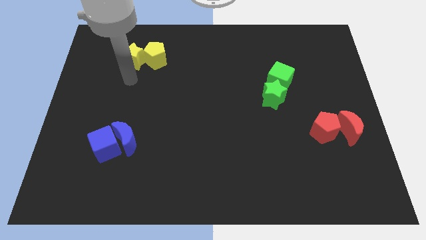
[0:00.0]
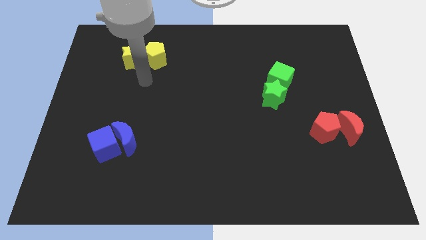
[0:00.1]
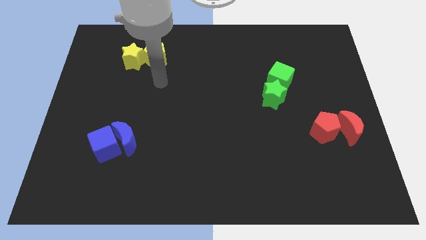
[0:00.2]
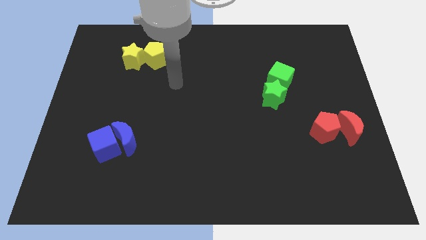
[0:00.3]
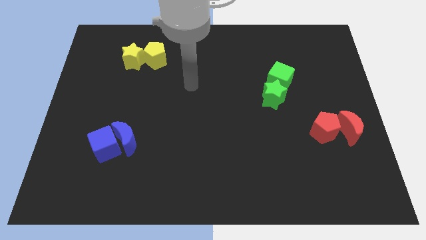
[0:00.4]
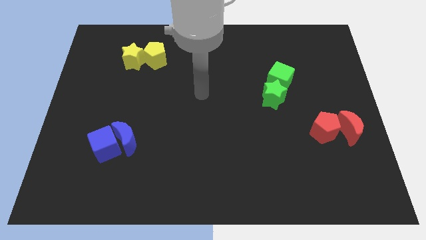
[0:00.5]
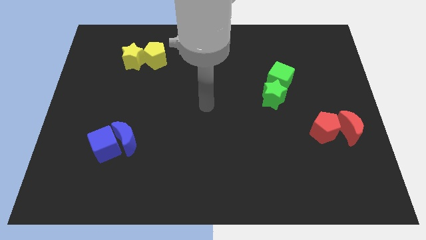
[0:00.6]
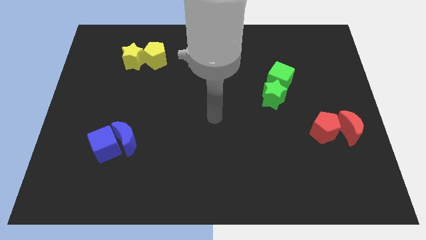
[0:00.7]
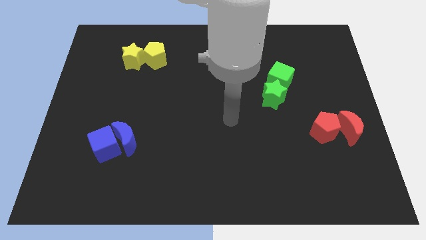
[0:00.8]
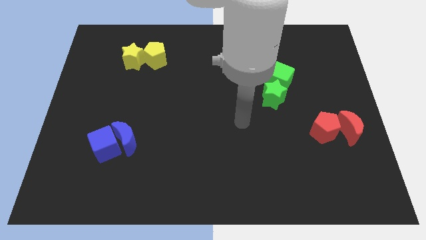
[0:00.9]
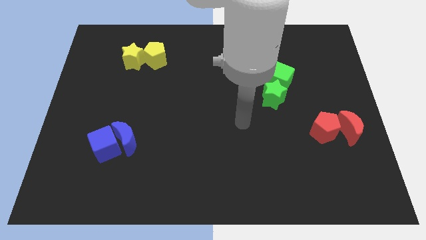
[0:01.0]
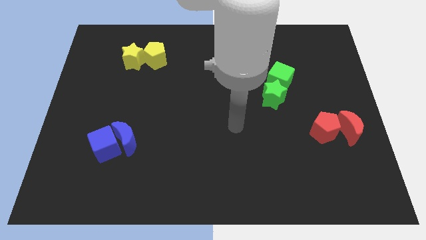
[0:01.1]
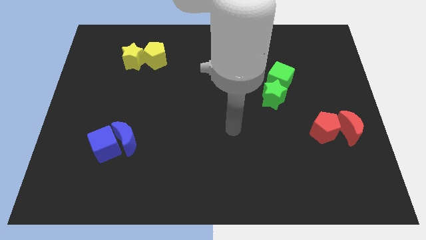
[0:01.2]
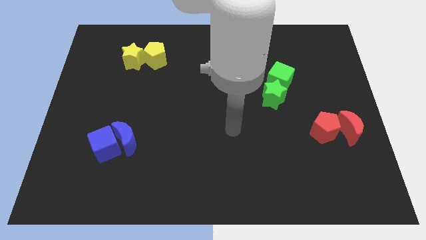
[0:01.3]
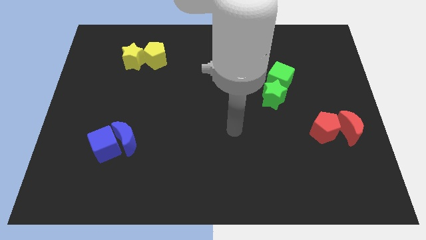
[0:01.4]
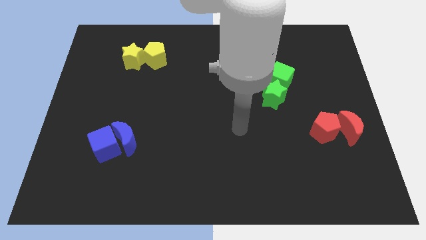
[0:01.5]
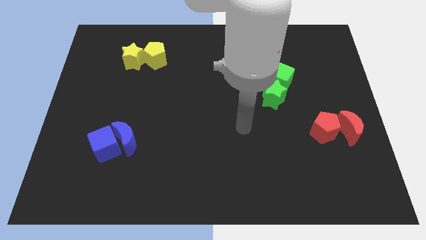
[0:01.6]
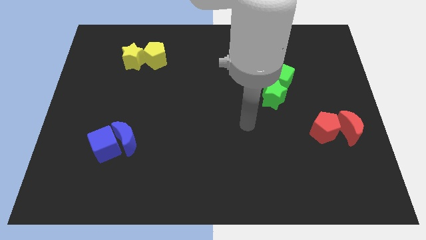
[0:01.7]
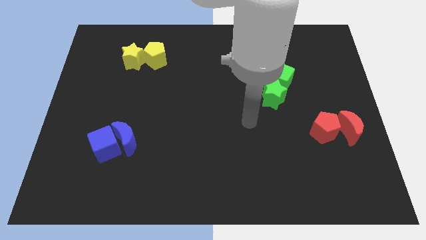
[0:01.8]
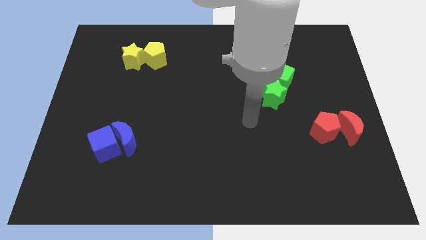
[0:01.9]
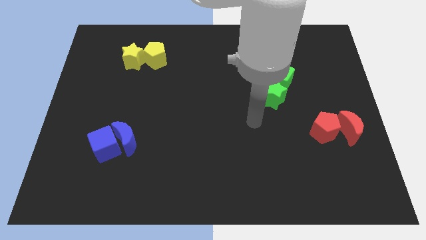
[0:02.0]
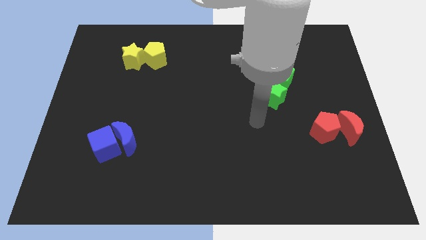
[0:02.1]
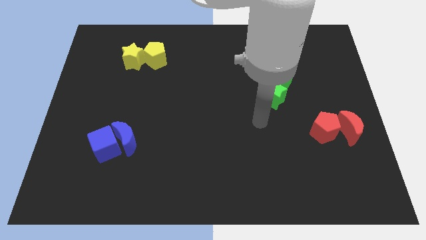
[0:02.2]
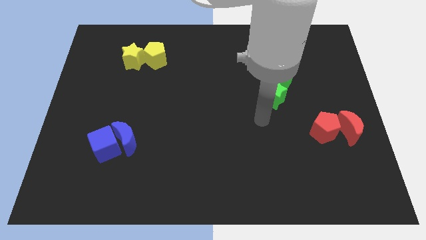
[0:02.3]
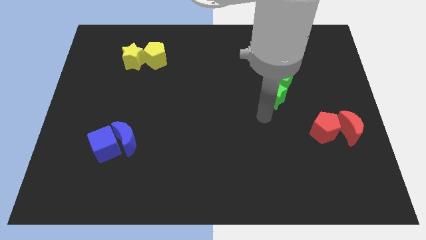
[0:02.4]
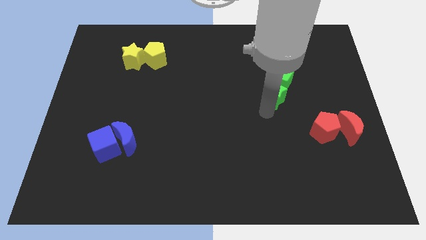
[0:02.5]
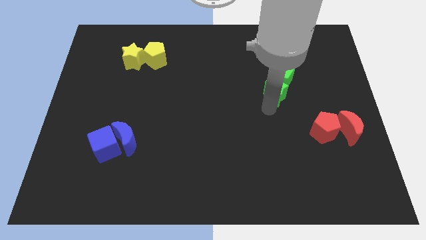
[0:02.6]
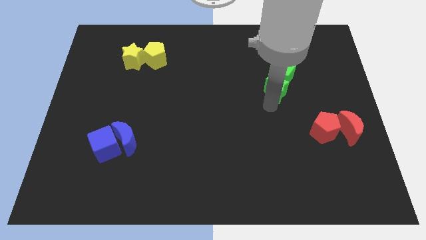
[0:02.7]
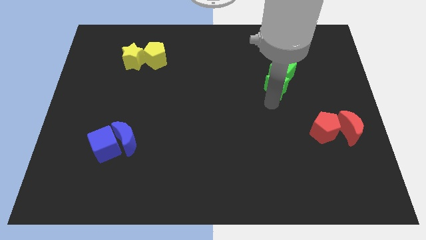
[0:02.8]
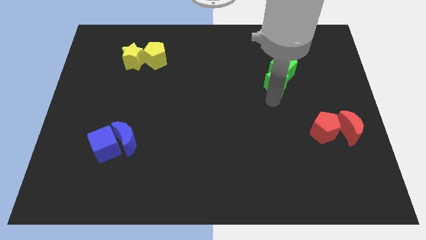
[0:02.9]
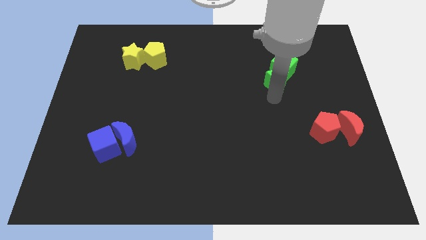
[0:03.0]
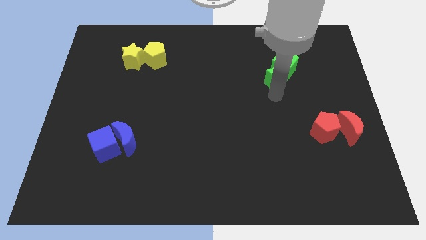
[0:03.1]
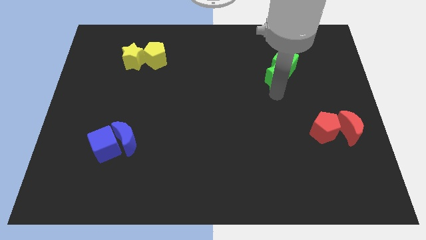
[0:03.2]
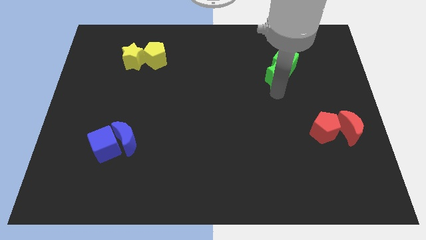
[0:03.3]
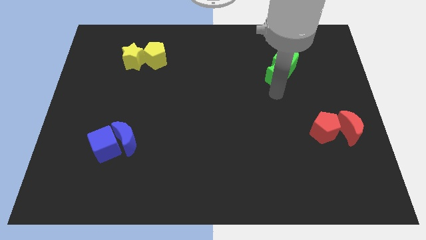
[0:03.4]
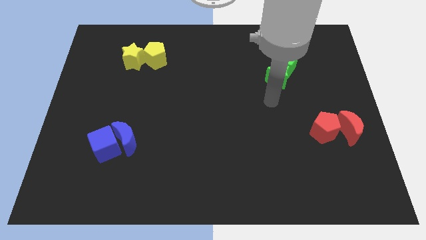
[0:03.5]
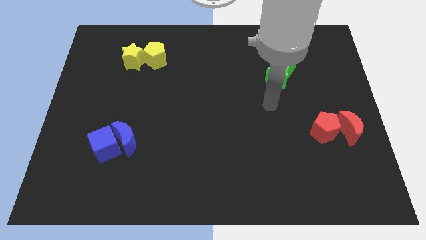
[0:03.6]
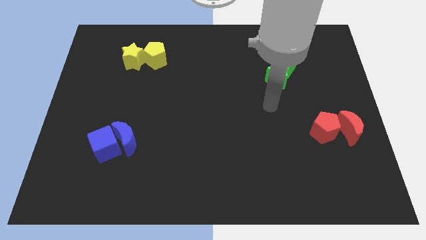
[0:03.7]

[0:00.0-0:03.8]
push green star and green cube towards top of the board

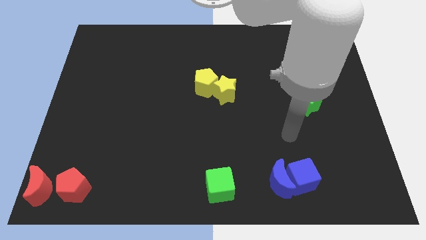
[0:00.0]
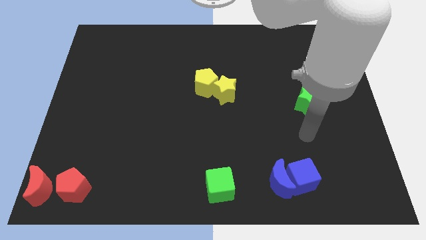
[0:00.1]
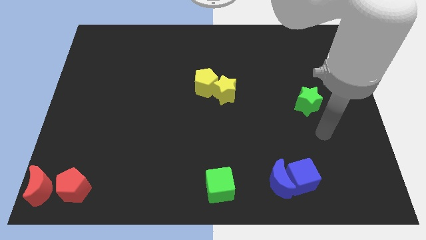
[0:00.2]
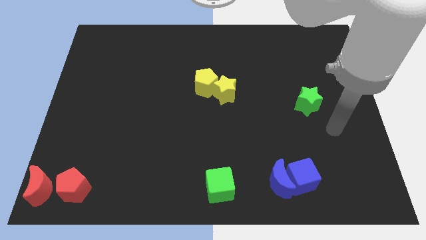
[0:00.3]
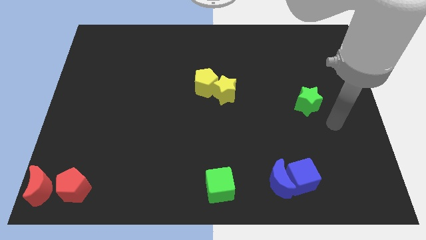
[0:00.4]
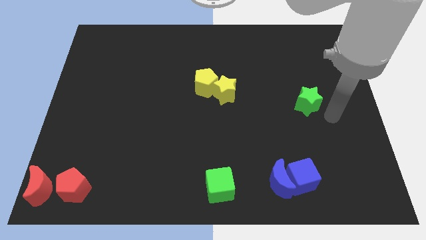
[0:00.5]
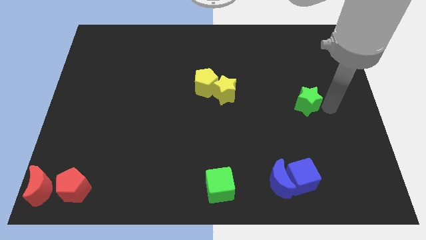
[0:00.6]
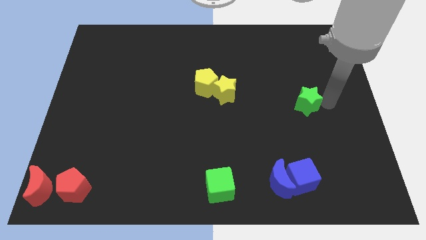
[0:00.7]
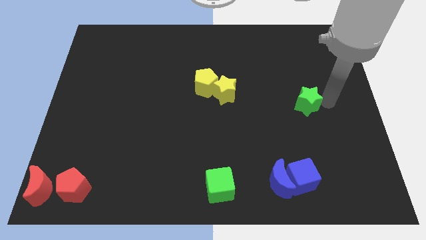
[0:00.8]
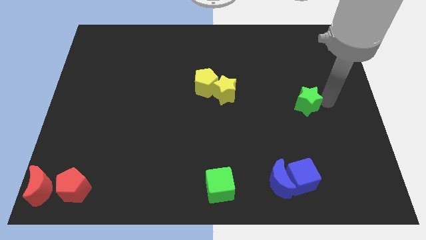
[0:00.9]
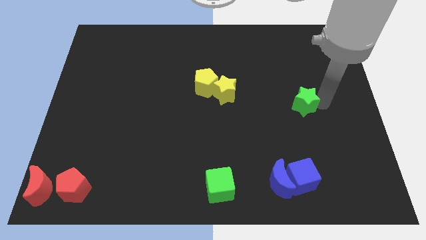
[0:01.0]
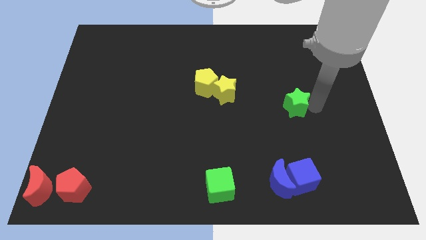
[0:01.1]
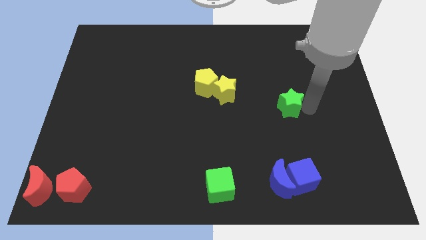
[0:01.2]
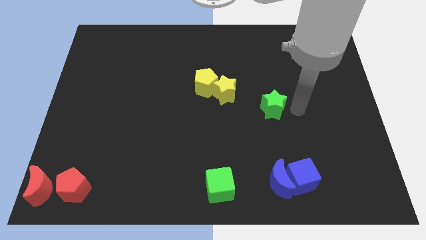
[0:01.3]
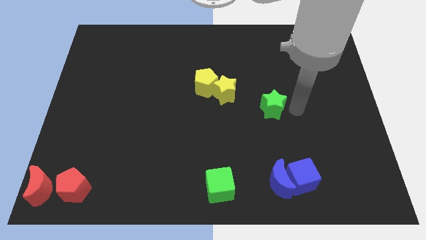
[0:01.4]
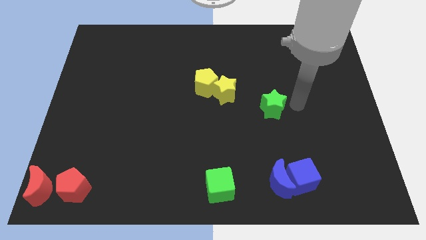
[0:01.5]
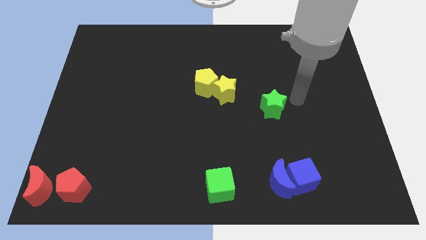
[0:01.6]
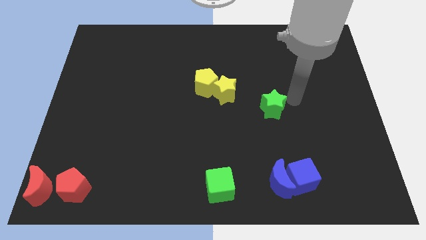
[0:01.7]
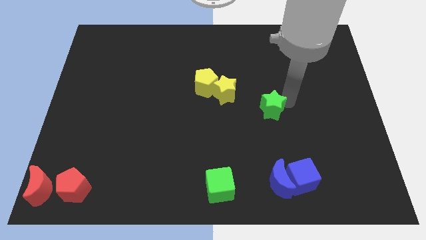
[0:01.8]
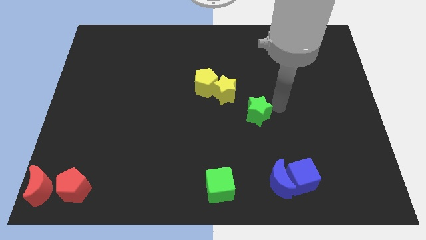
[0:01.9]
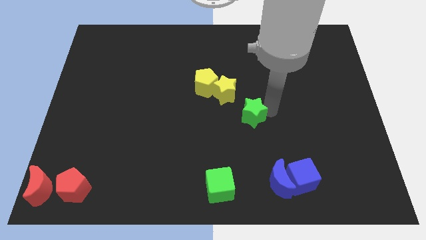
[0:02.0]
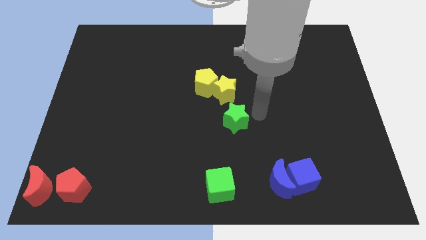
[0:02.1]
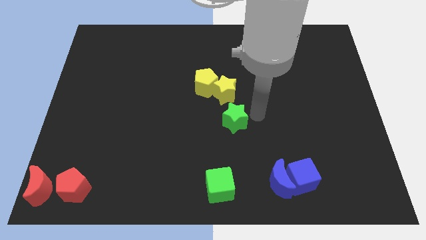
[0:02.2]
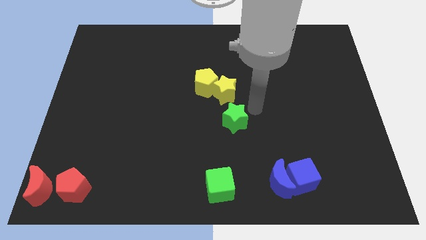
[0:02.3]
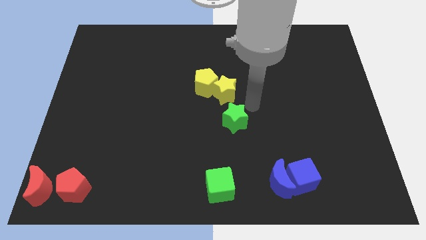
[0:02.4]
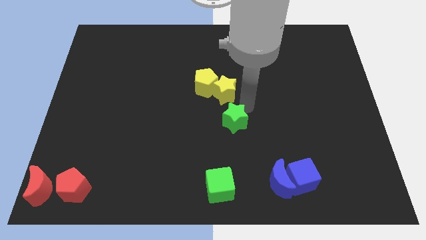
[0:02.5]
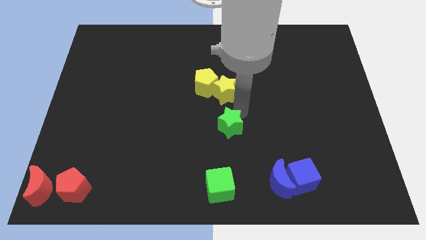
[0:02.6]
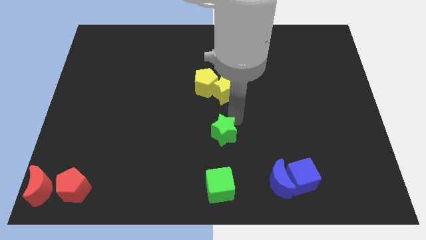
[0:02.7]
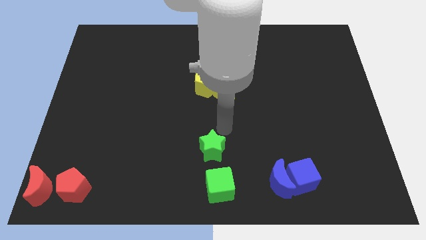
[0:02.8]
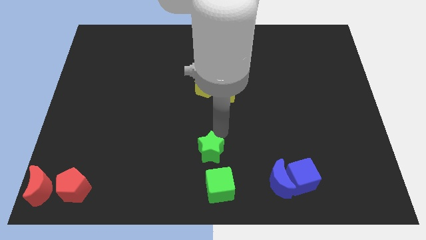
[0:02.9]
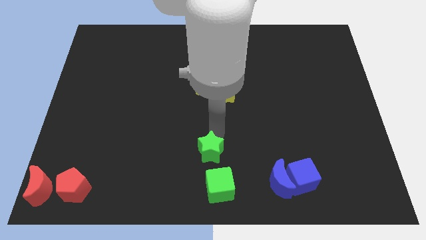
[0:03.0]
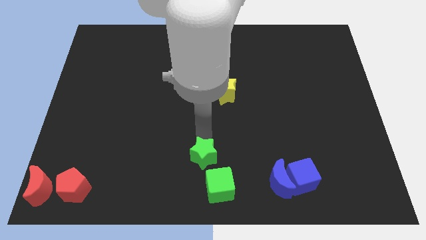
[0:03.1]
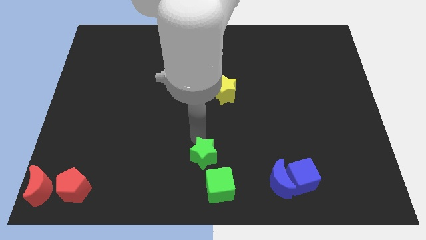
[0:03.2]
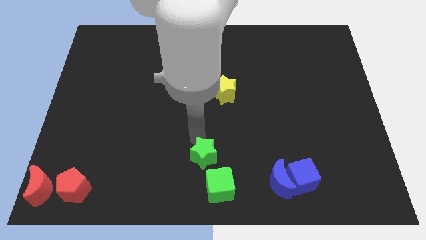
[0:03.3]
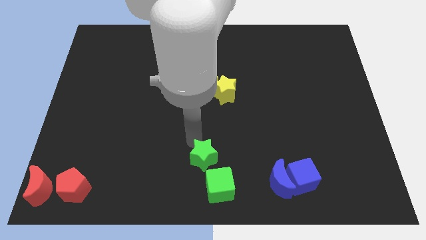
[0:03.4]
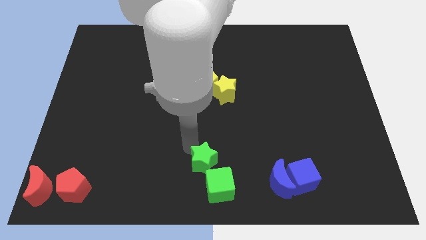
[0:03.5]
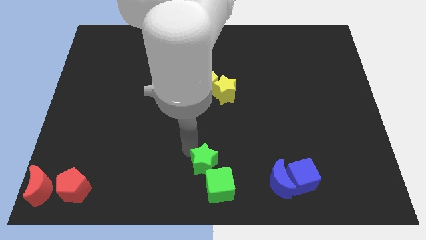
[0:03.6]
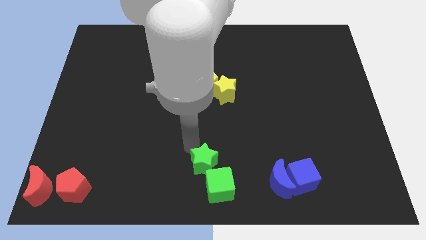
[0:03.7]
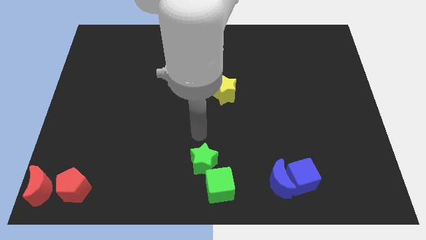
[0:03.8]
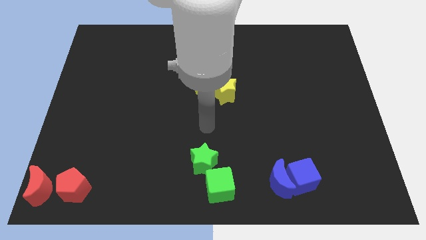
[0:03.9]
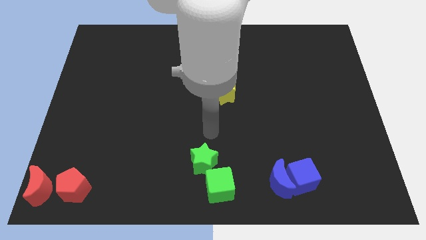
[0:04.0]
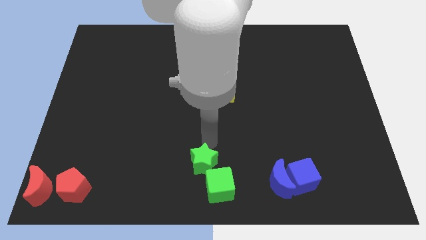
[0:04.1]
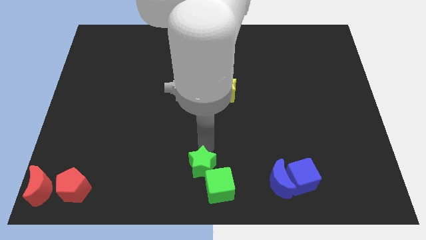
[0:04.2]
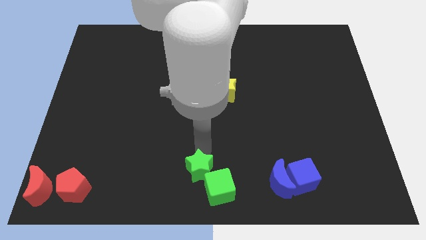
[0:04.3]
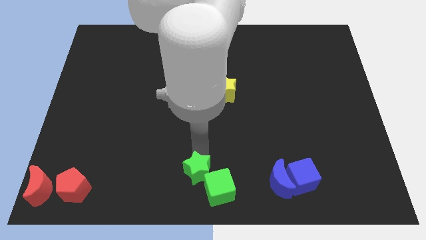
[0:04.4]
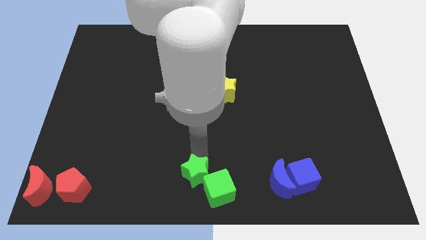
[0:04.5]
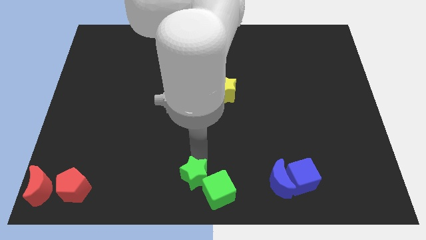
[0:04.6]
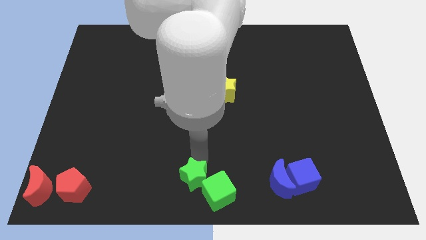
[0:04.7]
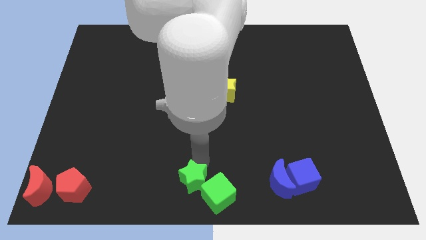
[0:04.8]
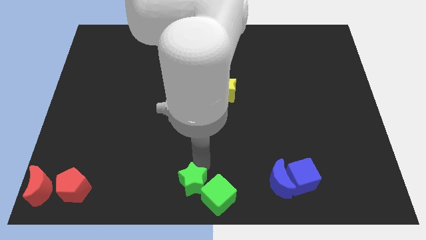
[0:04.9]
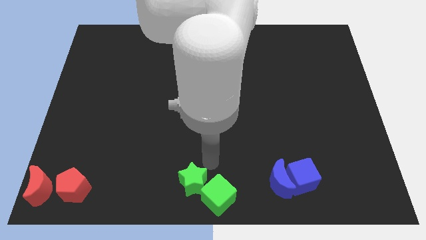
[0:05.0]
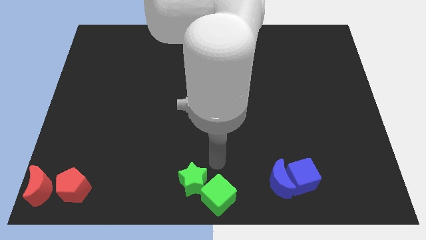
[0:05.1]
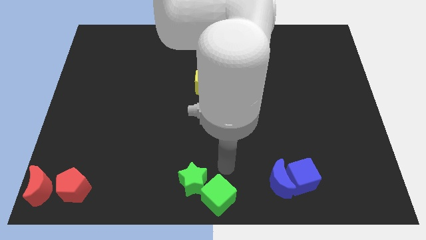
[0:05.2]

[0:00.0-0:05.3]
push the green star into green cube
